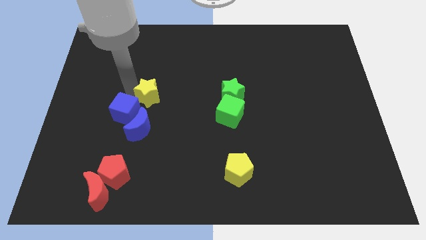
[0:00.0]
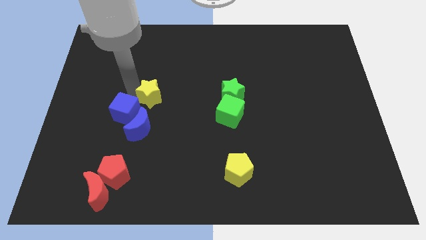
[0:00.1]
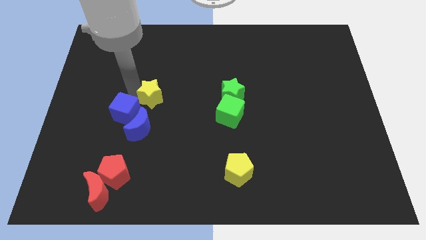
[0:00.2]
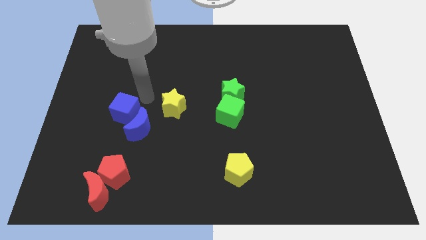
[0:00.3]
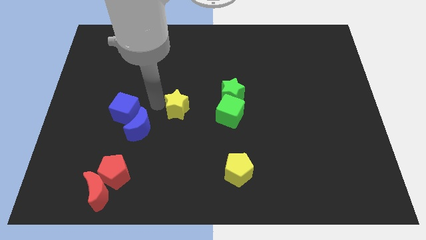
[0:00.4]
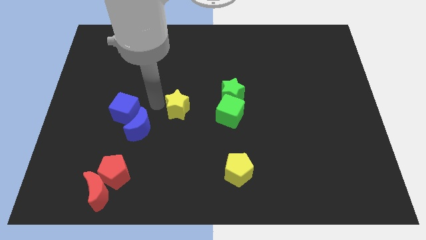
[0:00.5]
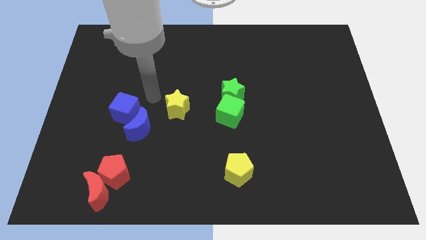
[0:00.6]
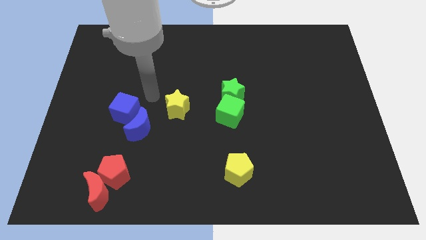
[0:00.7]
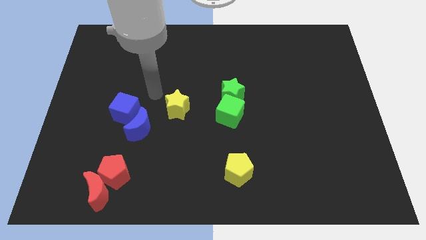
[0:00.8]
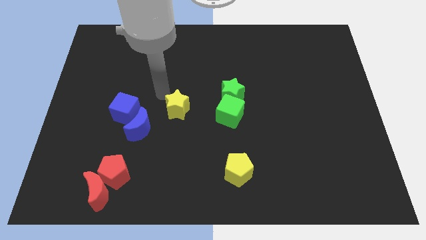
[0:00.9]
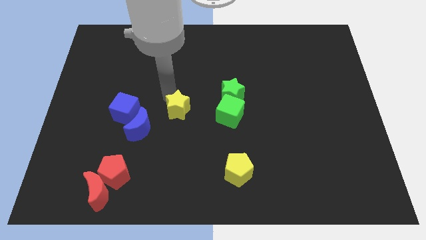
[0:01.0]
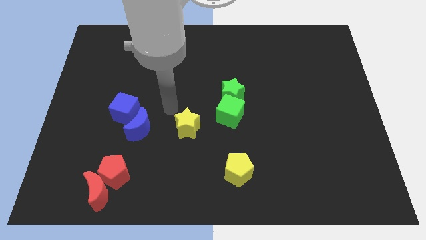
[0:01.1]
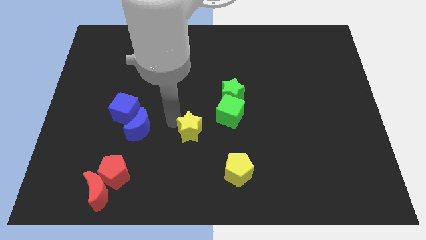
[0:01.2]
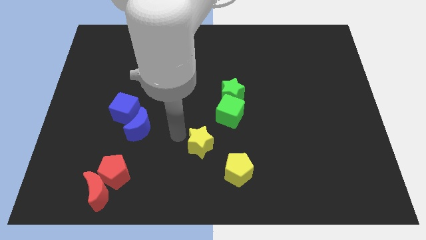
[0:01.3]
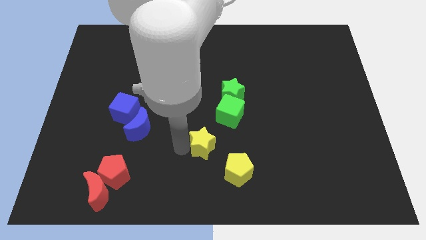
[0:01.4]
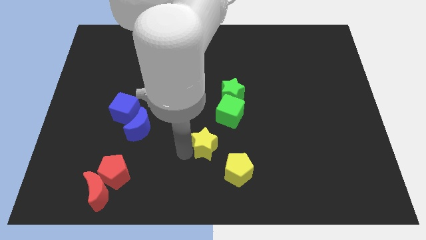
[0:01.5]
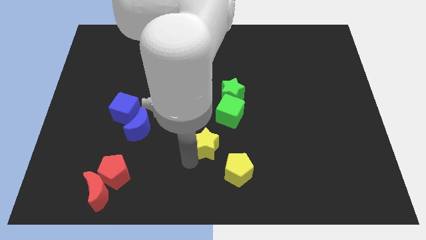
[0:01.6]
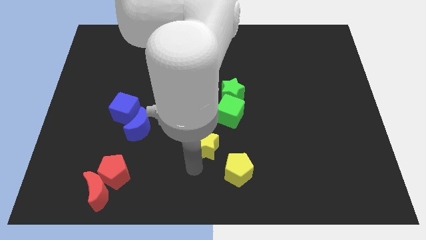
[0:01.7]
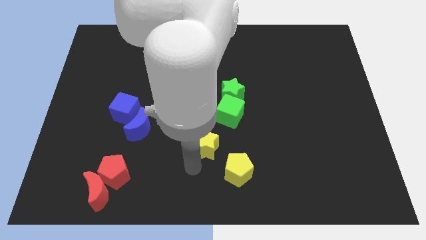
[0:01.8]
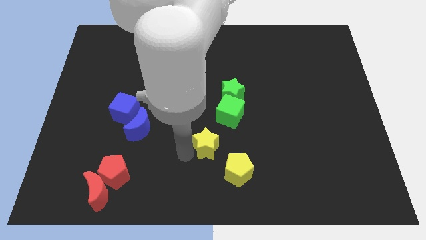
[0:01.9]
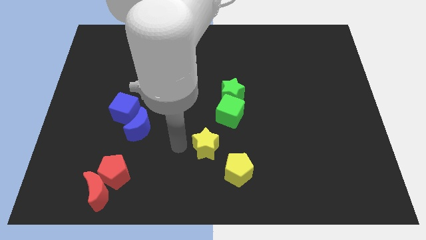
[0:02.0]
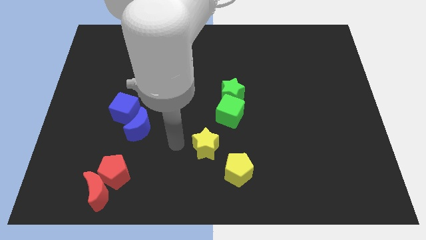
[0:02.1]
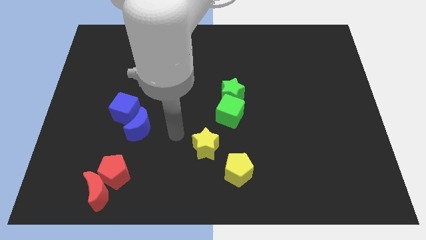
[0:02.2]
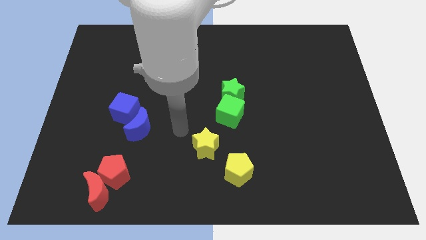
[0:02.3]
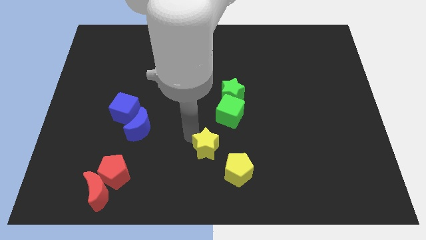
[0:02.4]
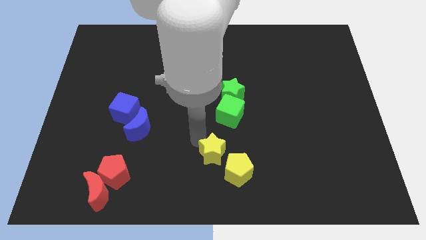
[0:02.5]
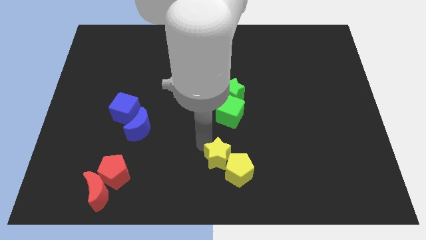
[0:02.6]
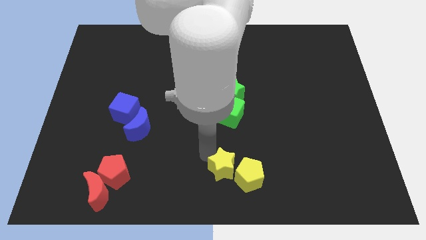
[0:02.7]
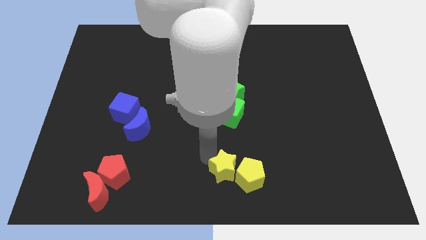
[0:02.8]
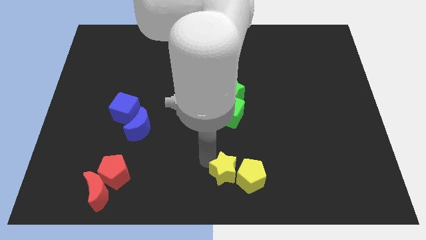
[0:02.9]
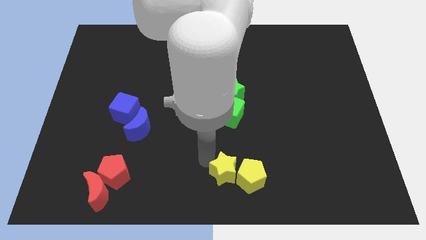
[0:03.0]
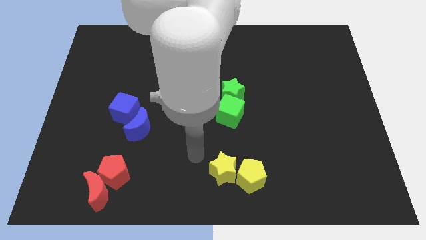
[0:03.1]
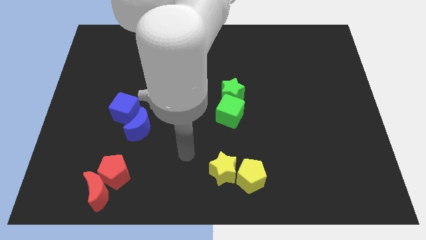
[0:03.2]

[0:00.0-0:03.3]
move yellow star into yellow pentagon

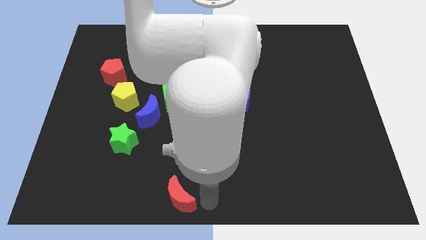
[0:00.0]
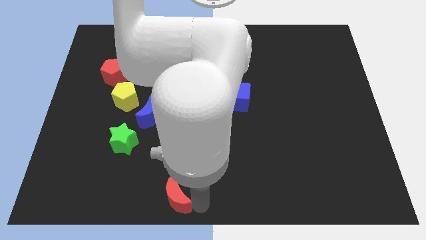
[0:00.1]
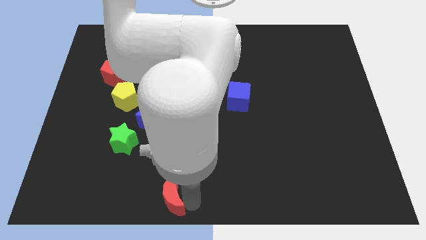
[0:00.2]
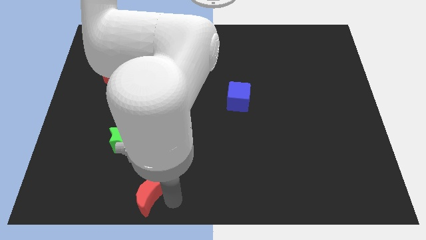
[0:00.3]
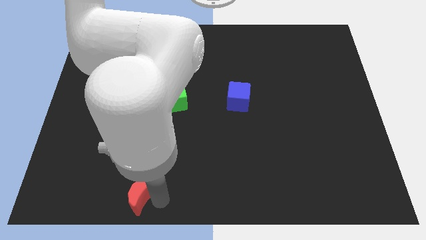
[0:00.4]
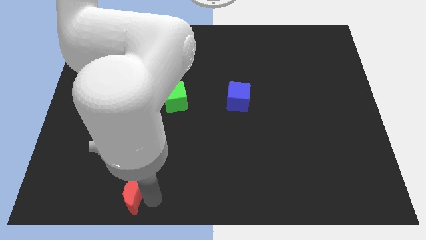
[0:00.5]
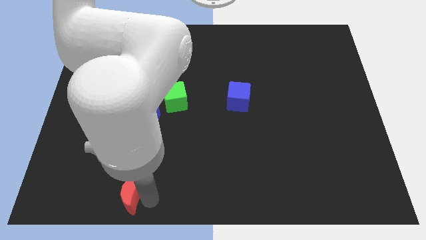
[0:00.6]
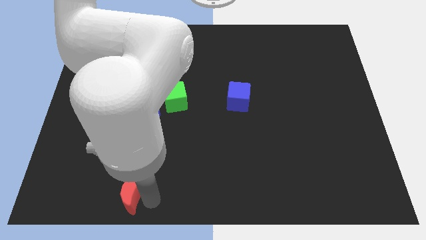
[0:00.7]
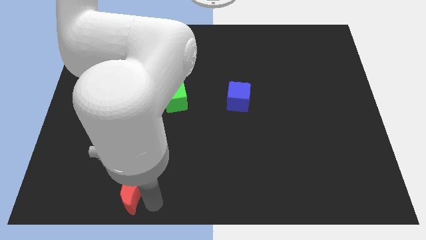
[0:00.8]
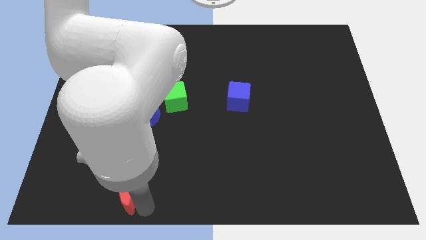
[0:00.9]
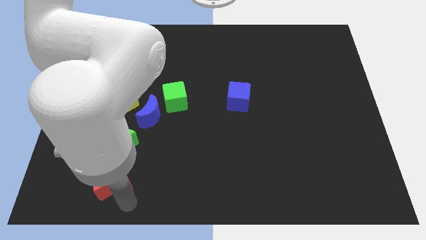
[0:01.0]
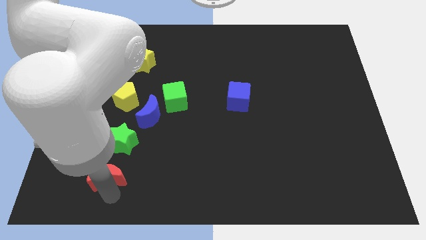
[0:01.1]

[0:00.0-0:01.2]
move the red crescent to the bottom of the green star

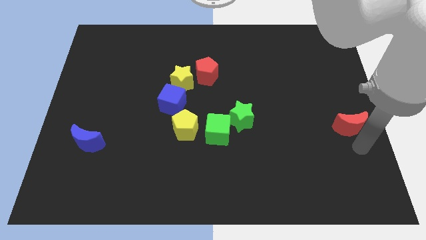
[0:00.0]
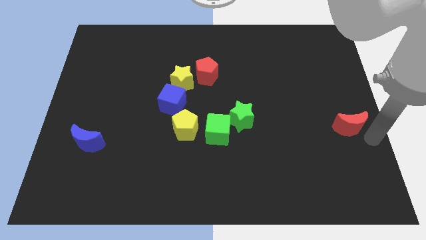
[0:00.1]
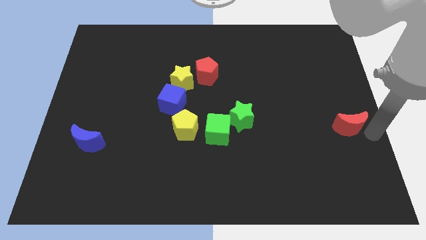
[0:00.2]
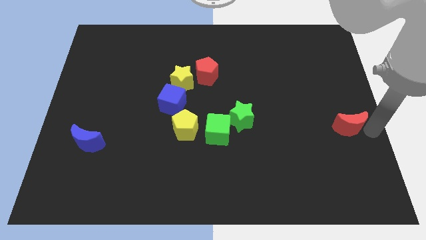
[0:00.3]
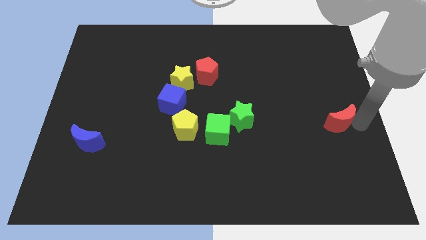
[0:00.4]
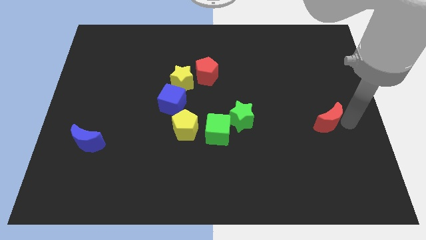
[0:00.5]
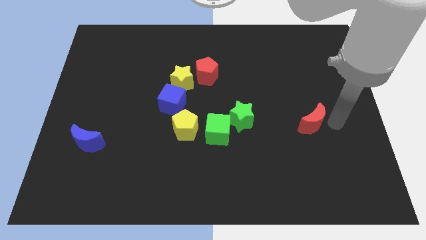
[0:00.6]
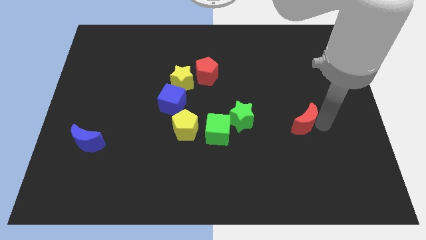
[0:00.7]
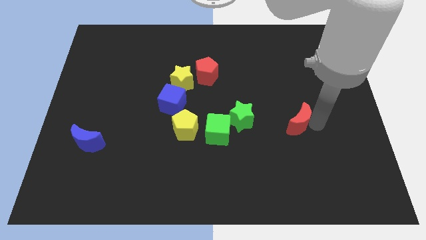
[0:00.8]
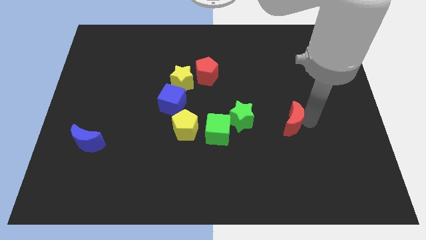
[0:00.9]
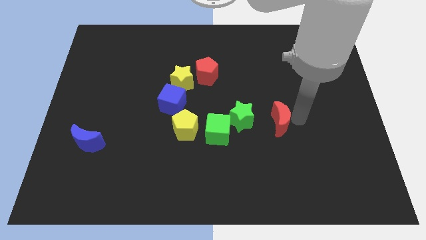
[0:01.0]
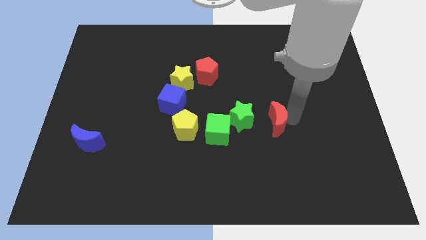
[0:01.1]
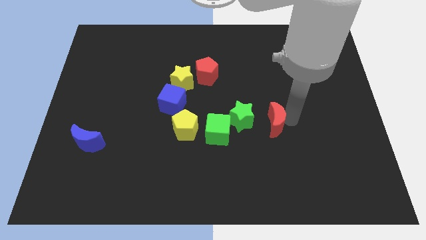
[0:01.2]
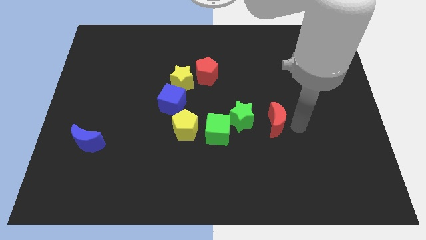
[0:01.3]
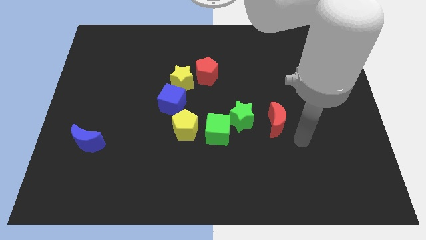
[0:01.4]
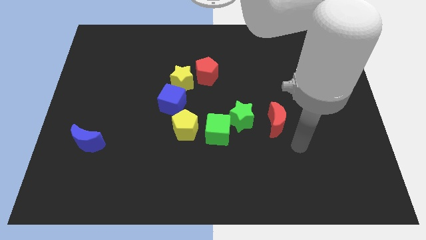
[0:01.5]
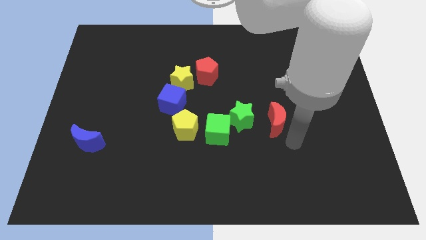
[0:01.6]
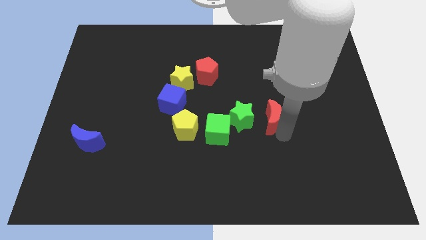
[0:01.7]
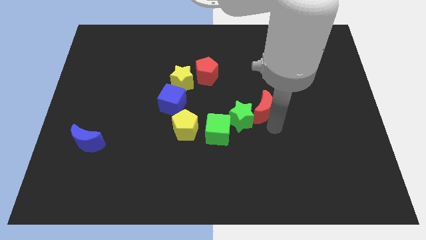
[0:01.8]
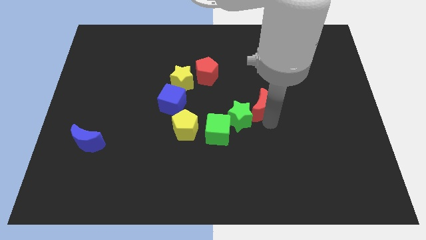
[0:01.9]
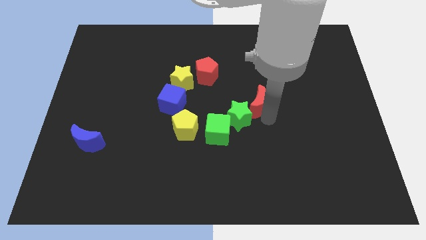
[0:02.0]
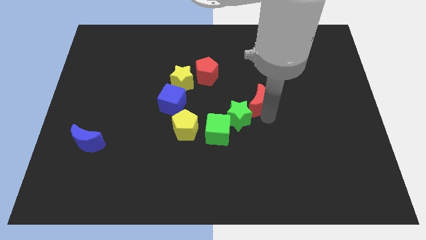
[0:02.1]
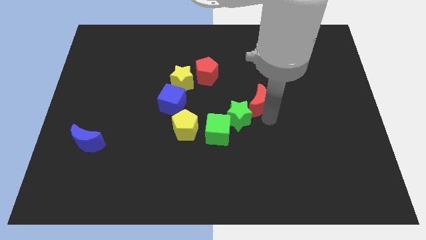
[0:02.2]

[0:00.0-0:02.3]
move red moon near green star

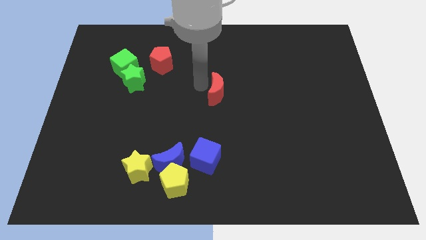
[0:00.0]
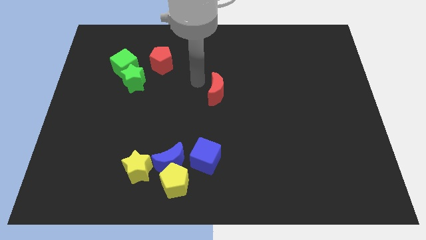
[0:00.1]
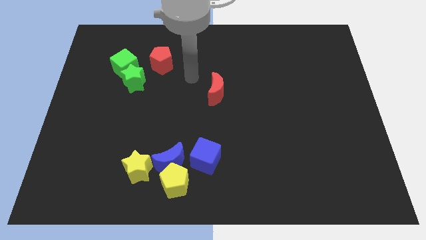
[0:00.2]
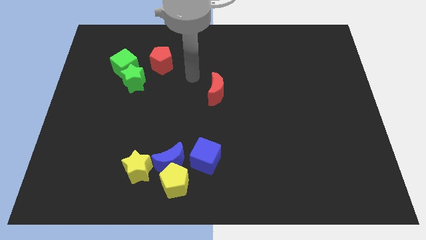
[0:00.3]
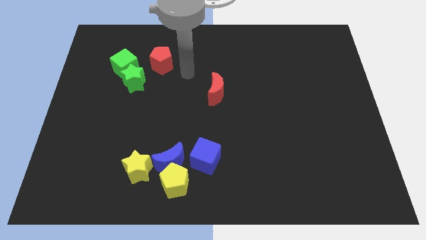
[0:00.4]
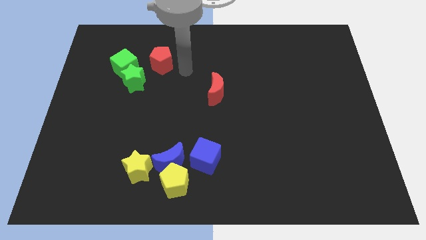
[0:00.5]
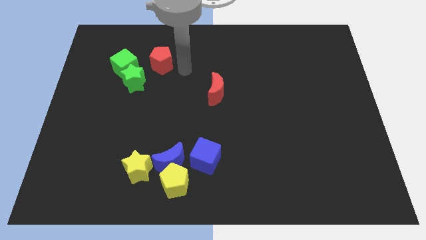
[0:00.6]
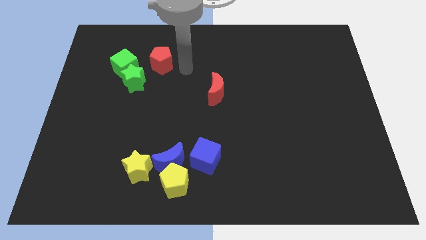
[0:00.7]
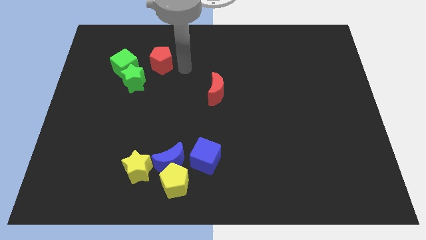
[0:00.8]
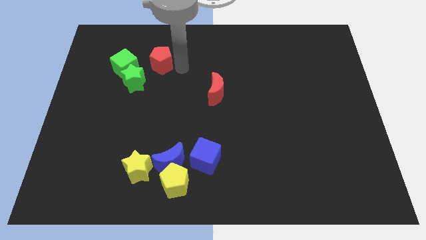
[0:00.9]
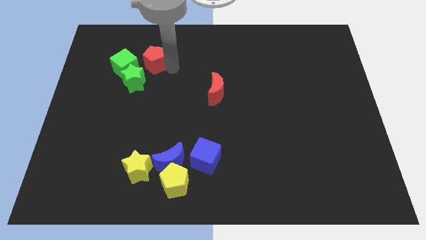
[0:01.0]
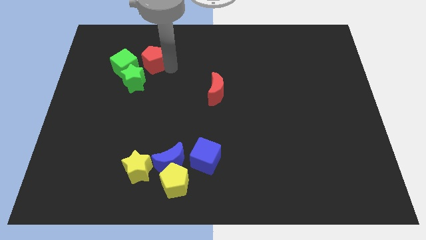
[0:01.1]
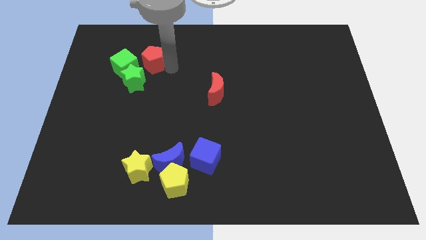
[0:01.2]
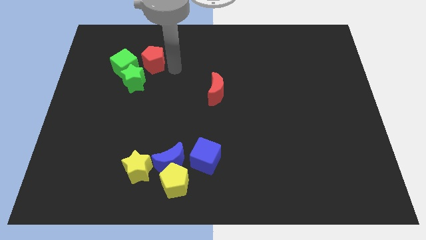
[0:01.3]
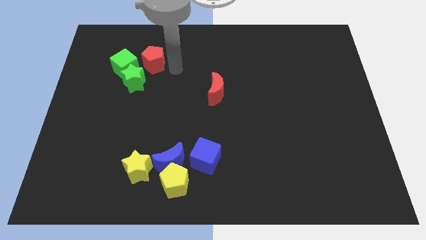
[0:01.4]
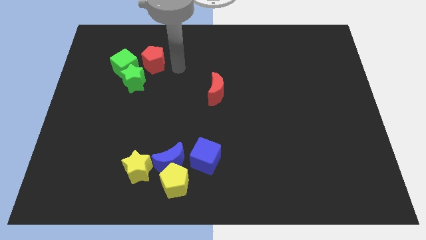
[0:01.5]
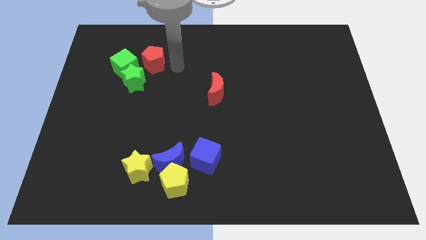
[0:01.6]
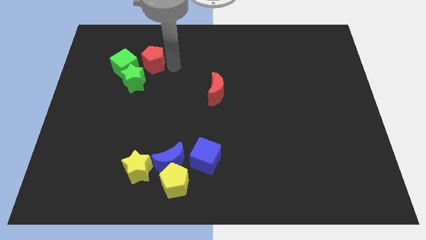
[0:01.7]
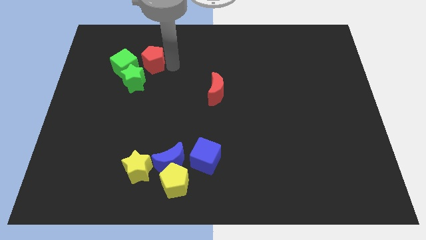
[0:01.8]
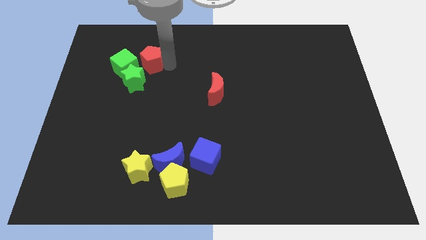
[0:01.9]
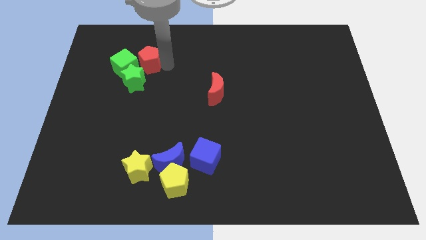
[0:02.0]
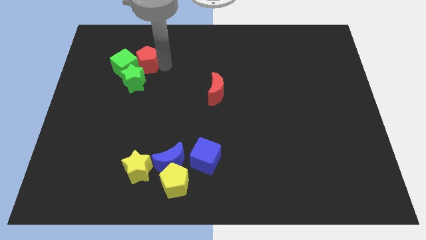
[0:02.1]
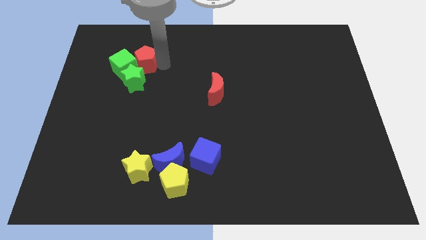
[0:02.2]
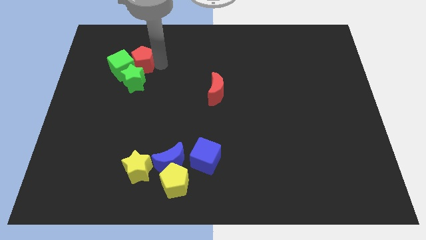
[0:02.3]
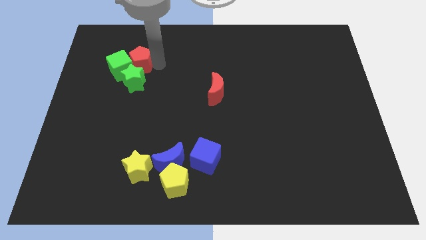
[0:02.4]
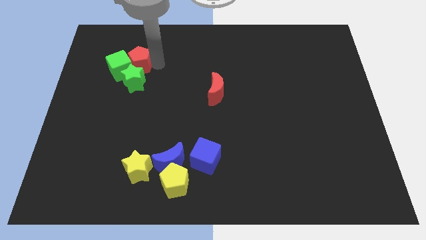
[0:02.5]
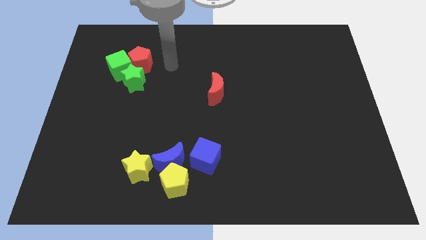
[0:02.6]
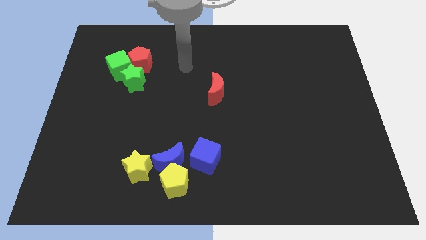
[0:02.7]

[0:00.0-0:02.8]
move red pentagon to the group of green blocks
